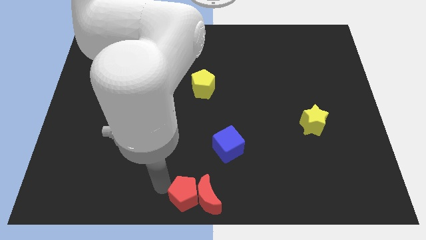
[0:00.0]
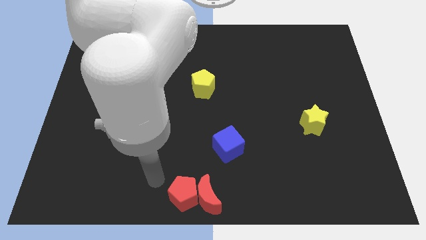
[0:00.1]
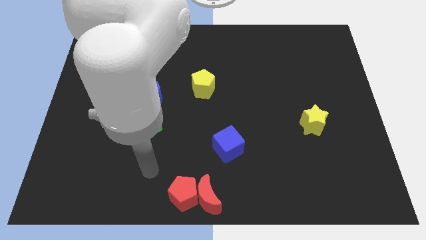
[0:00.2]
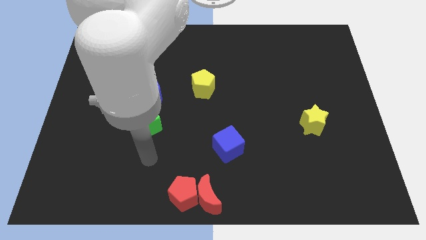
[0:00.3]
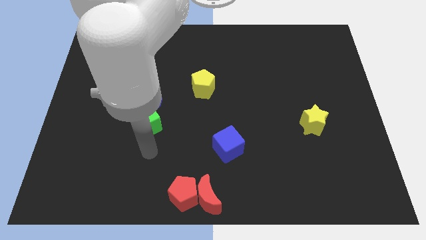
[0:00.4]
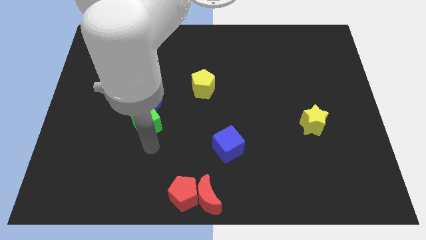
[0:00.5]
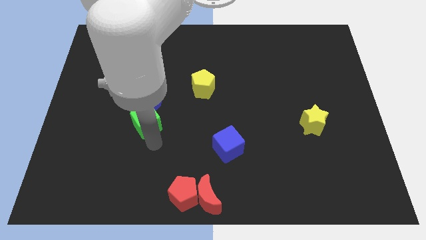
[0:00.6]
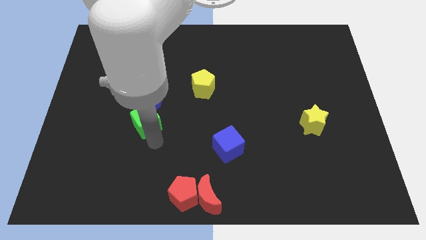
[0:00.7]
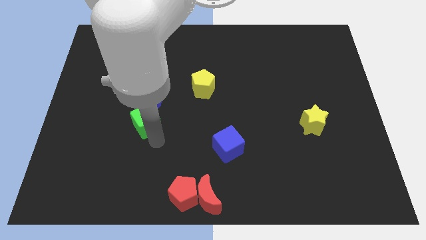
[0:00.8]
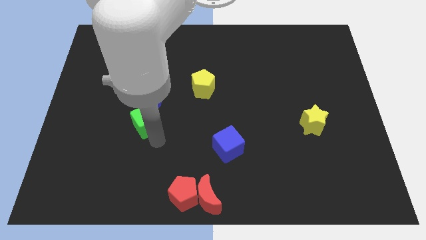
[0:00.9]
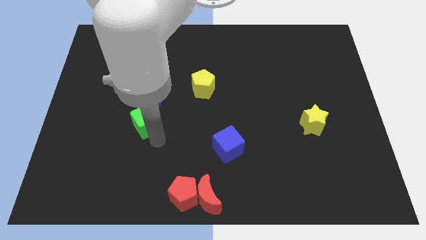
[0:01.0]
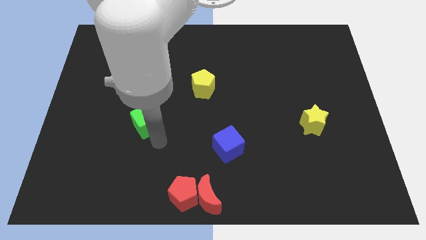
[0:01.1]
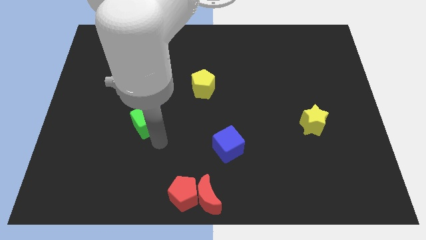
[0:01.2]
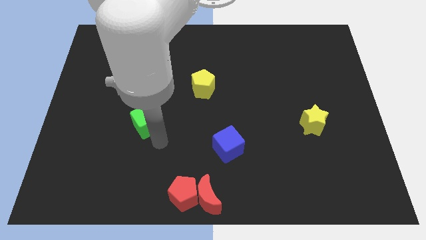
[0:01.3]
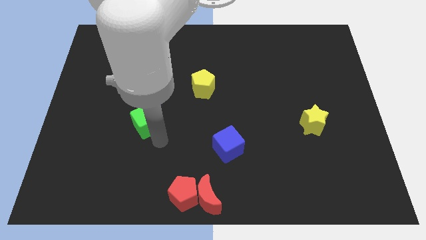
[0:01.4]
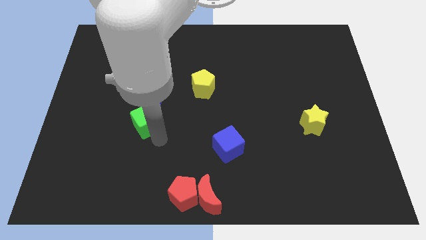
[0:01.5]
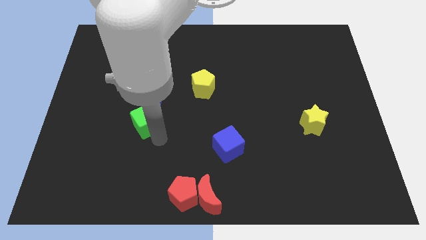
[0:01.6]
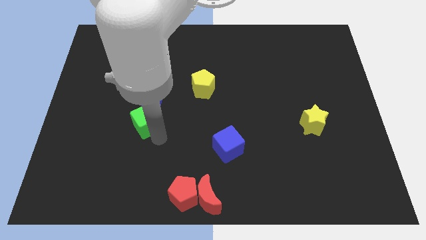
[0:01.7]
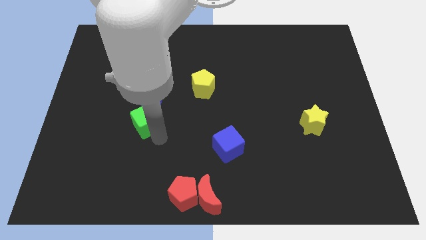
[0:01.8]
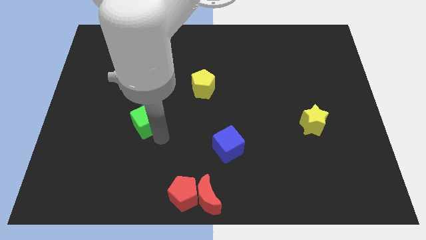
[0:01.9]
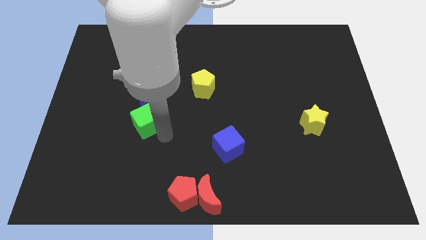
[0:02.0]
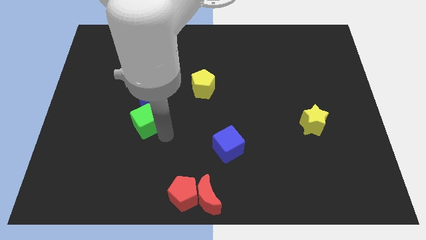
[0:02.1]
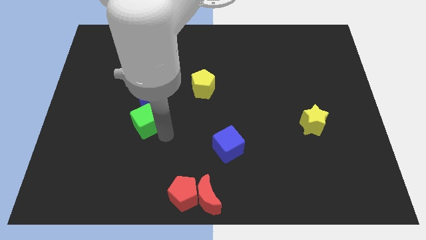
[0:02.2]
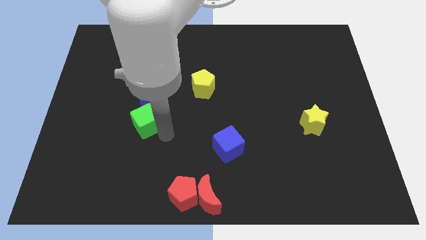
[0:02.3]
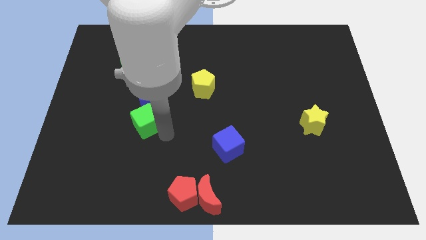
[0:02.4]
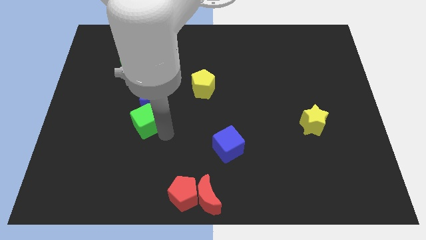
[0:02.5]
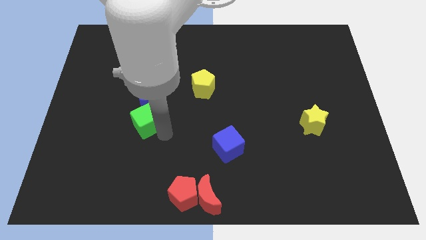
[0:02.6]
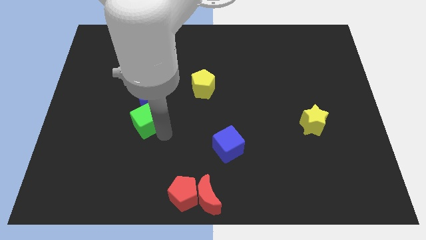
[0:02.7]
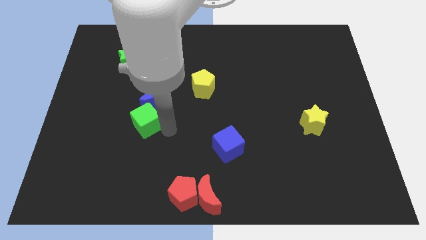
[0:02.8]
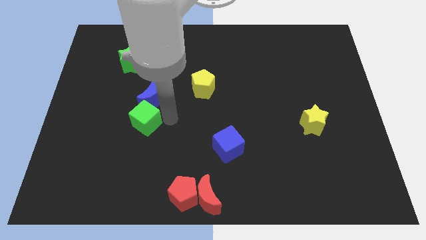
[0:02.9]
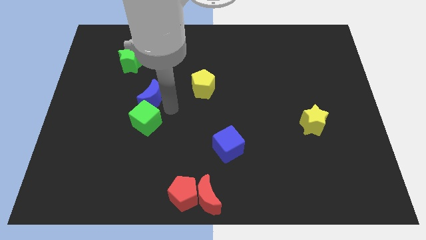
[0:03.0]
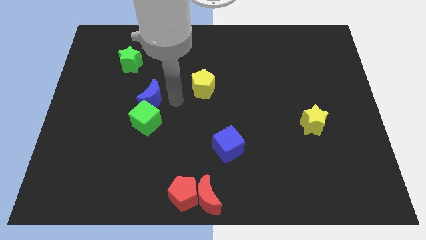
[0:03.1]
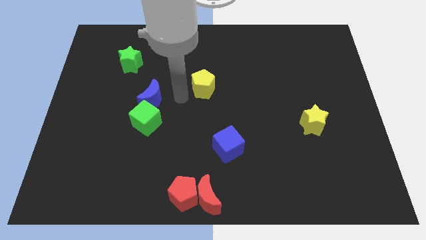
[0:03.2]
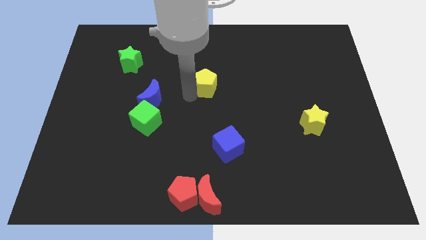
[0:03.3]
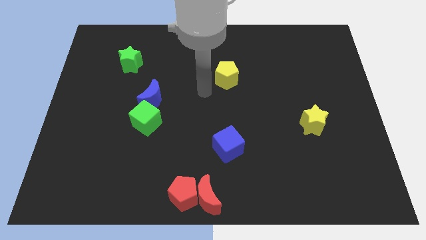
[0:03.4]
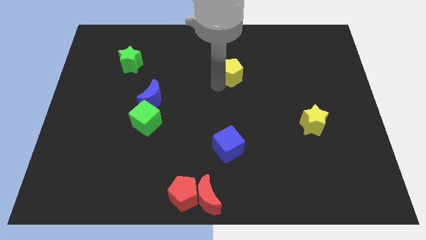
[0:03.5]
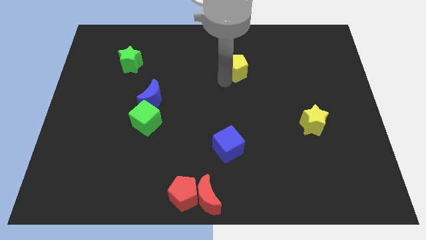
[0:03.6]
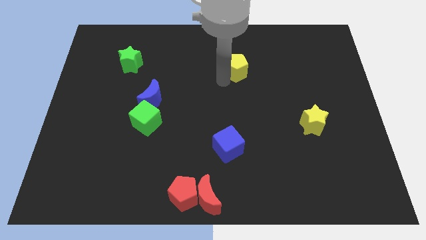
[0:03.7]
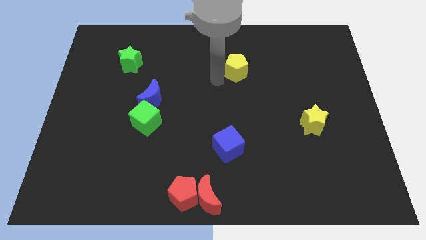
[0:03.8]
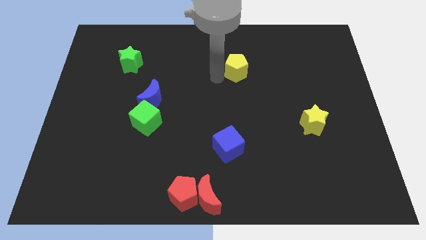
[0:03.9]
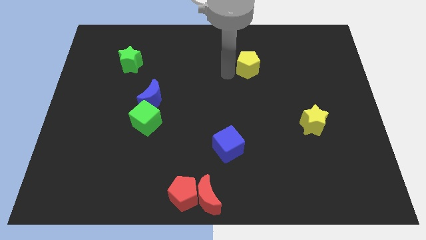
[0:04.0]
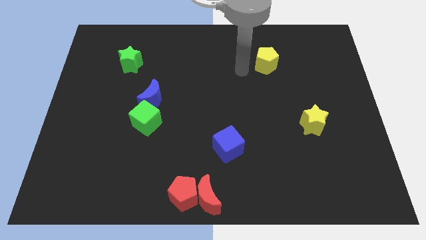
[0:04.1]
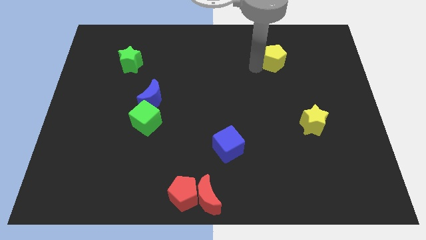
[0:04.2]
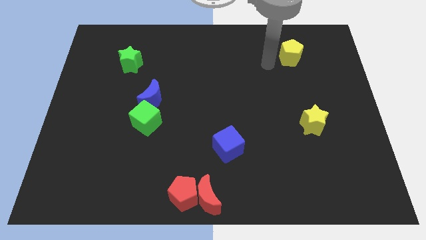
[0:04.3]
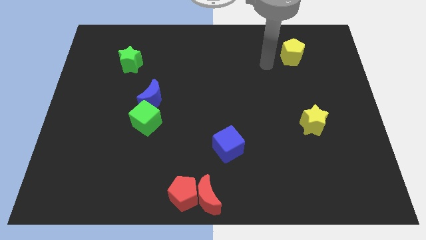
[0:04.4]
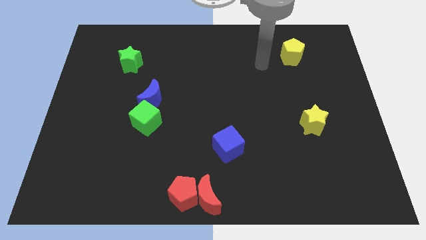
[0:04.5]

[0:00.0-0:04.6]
push the yellow pentagon to the top side of the yellow star

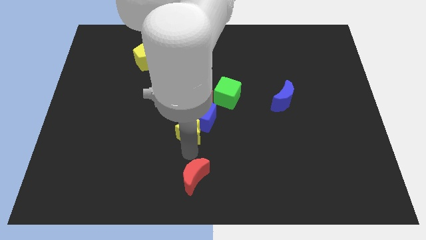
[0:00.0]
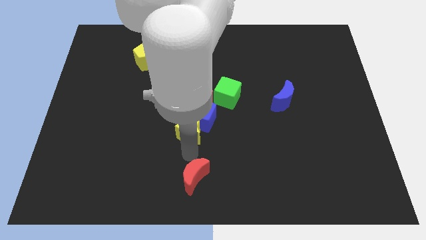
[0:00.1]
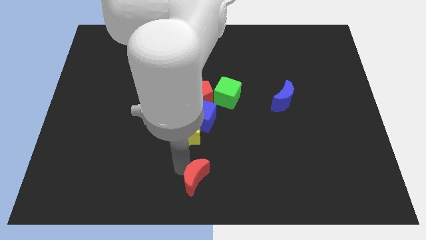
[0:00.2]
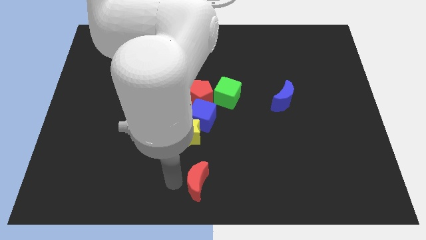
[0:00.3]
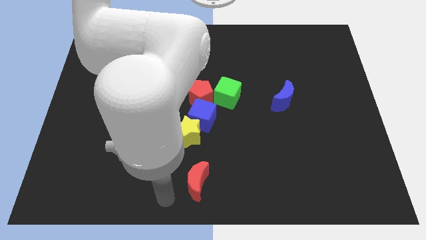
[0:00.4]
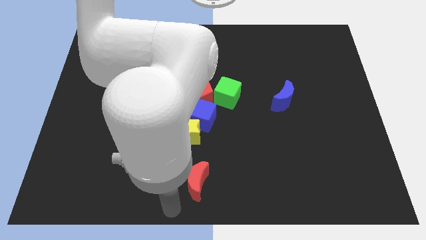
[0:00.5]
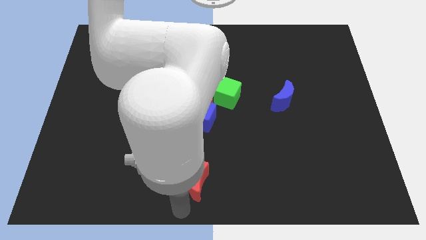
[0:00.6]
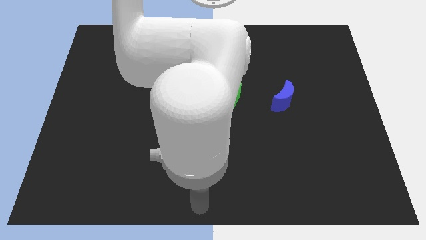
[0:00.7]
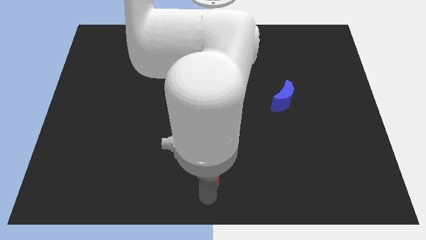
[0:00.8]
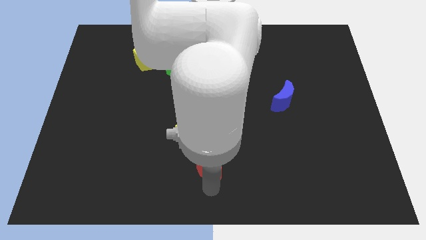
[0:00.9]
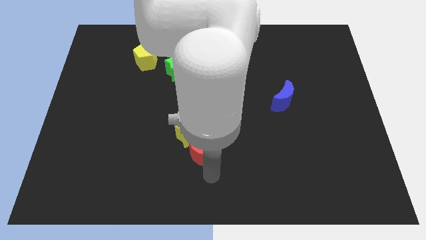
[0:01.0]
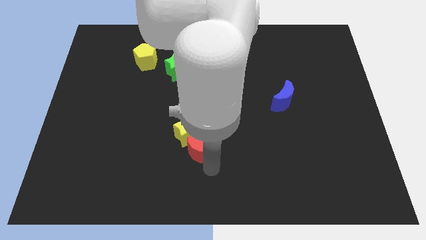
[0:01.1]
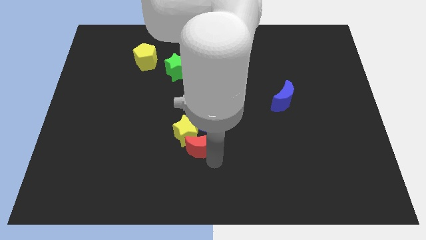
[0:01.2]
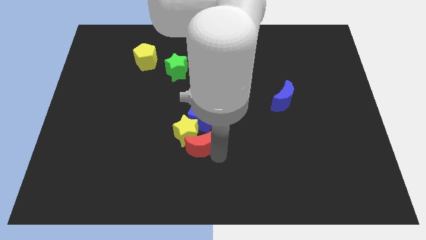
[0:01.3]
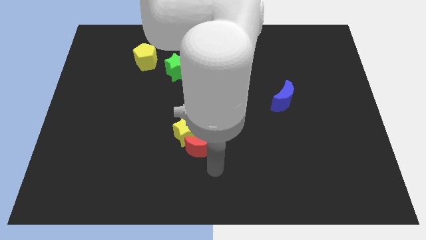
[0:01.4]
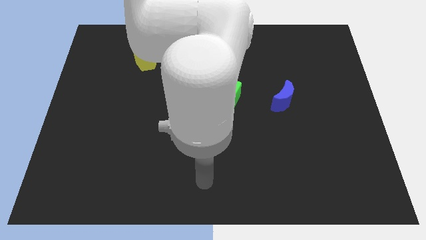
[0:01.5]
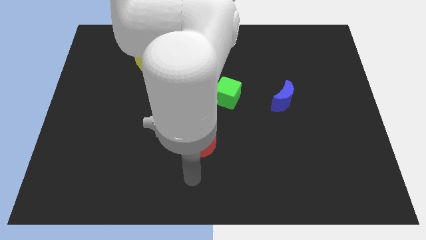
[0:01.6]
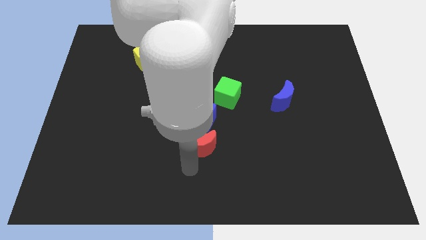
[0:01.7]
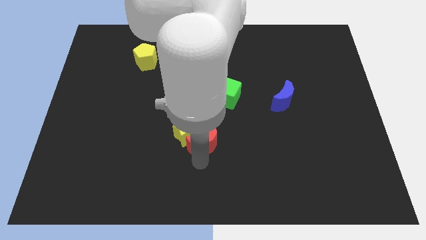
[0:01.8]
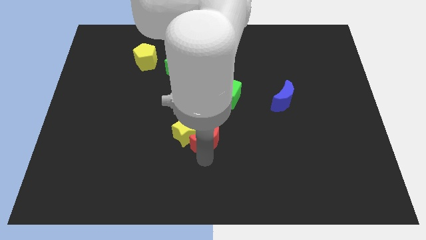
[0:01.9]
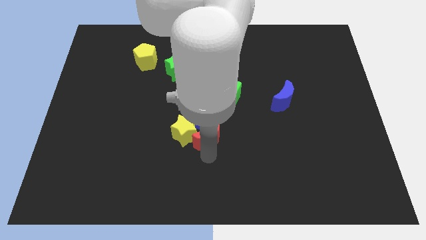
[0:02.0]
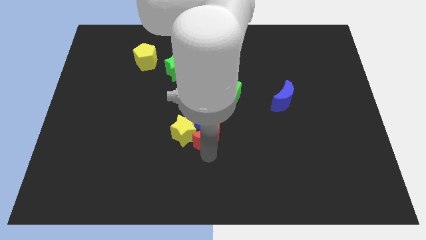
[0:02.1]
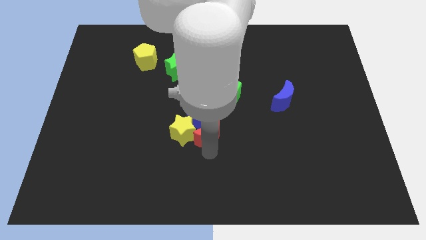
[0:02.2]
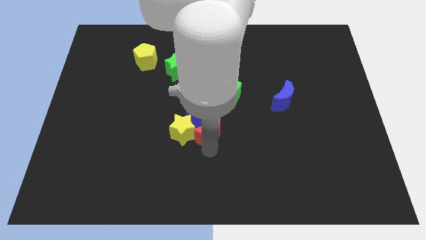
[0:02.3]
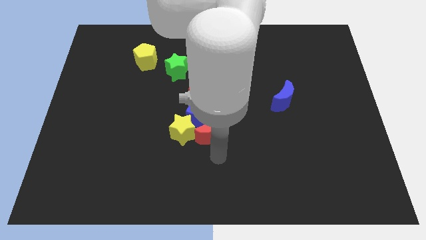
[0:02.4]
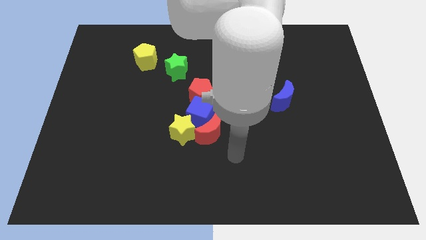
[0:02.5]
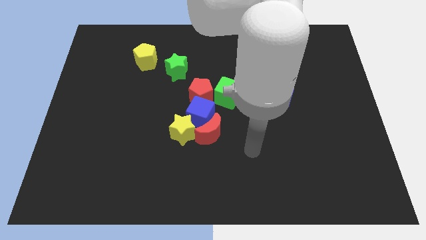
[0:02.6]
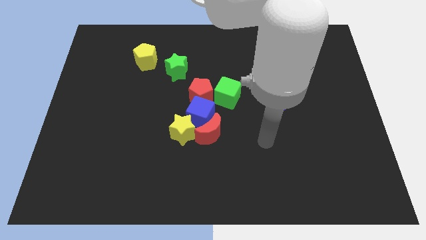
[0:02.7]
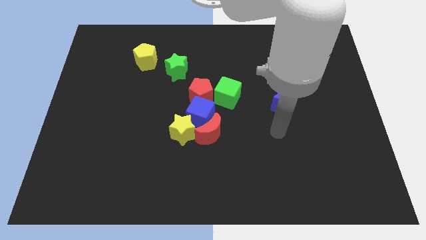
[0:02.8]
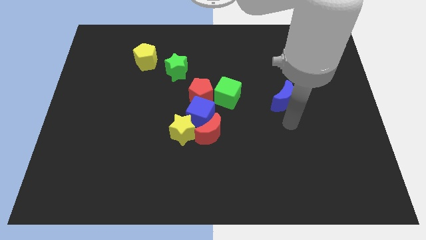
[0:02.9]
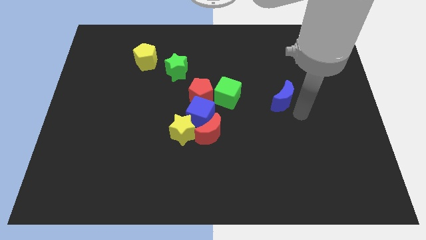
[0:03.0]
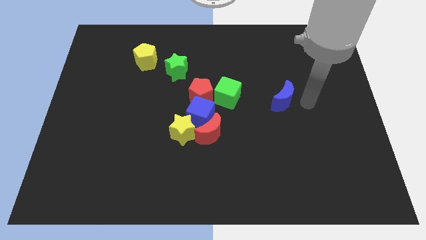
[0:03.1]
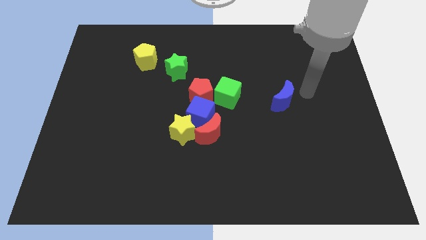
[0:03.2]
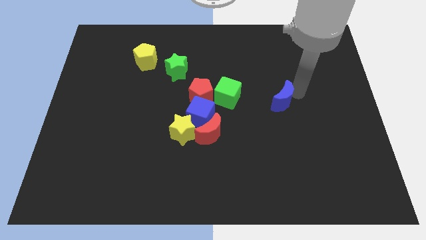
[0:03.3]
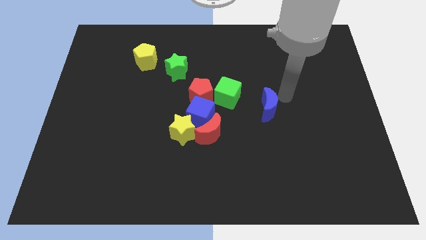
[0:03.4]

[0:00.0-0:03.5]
push the red crescent into the blue cube

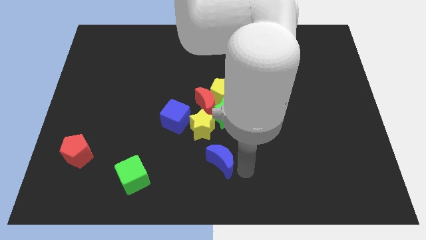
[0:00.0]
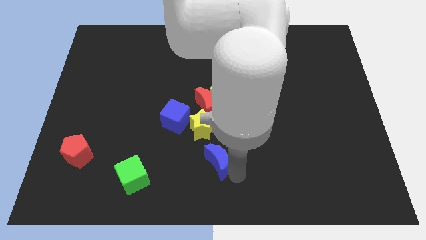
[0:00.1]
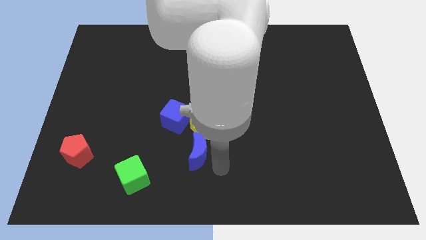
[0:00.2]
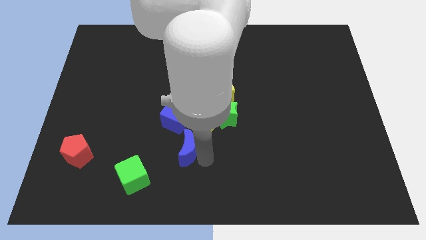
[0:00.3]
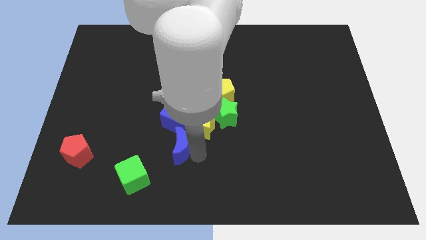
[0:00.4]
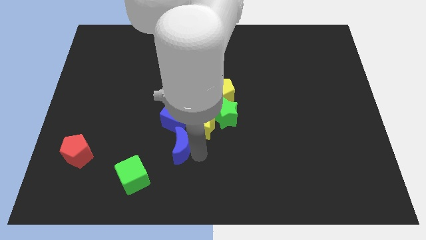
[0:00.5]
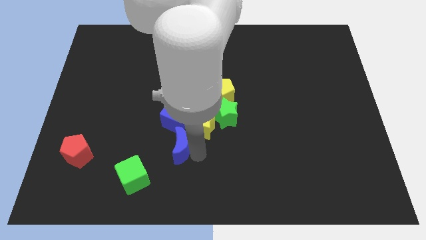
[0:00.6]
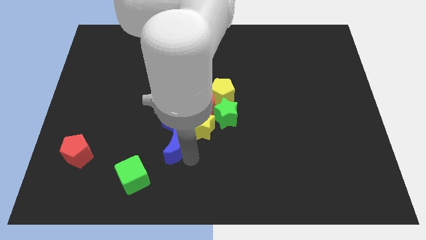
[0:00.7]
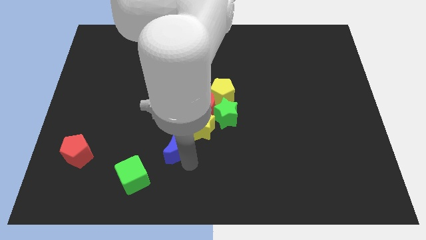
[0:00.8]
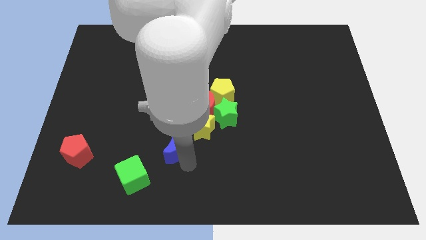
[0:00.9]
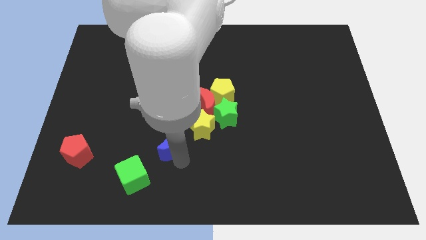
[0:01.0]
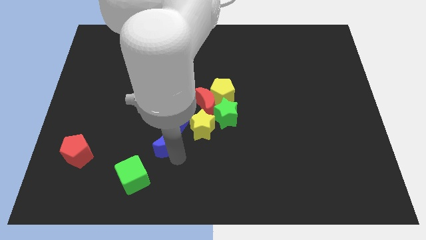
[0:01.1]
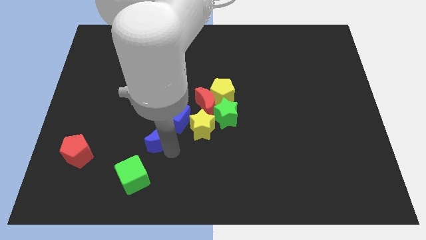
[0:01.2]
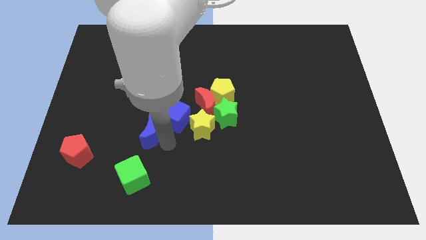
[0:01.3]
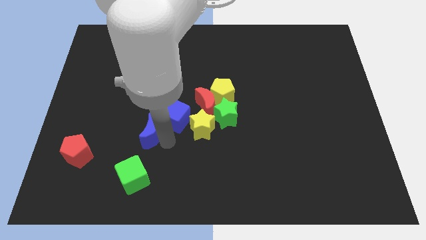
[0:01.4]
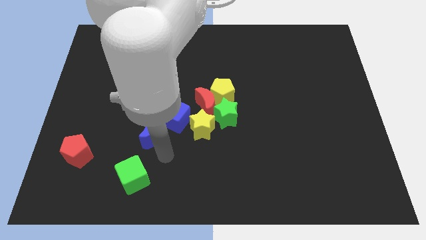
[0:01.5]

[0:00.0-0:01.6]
push the blue crescent towards the blue cube
